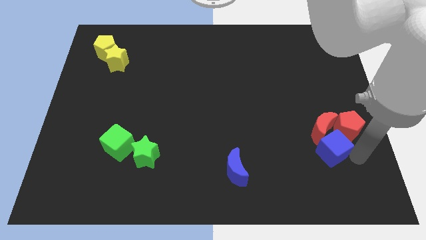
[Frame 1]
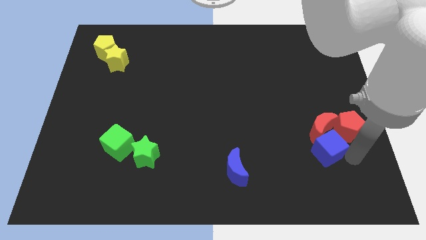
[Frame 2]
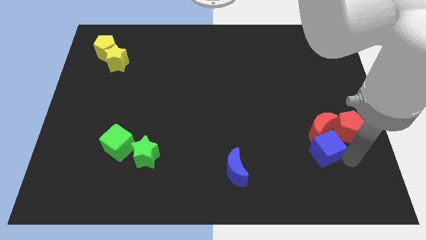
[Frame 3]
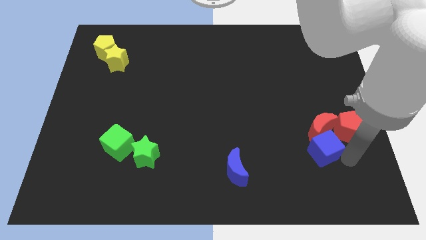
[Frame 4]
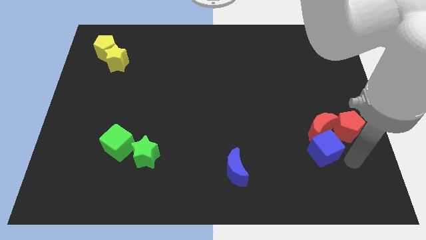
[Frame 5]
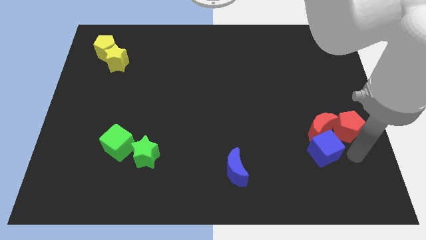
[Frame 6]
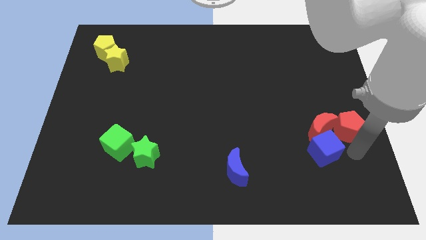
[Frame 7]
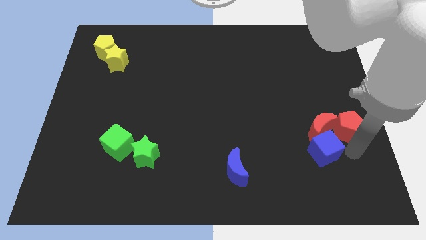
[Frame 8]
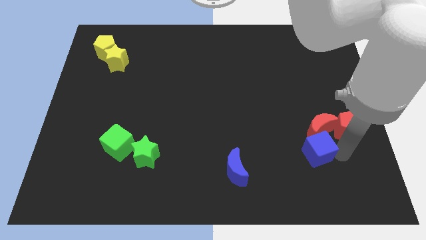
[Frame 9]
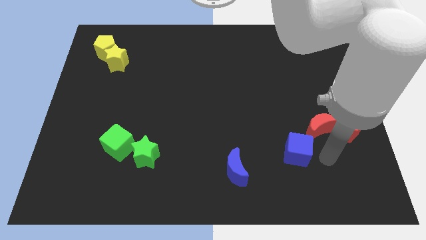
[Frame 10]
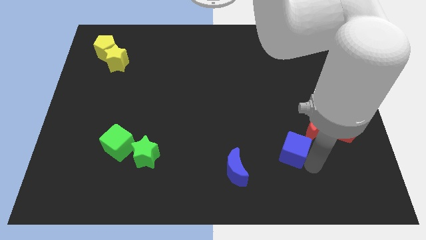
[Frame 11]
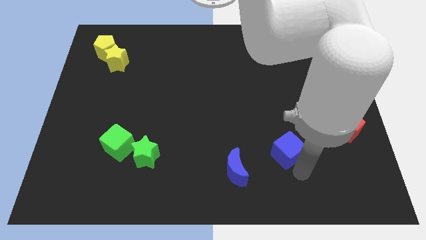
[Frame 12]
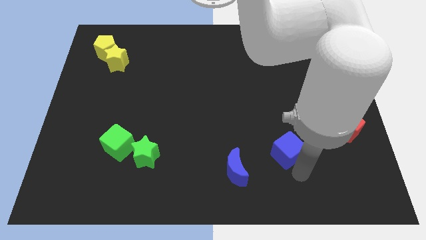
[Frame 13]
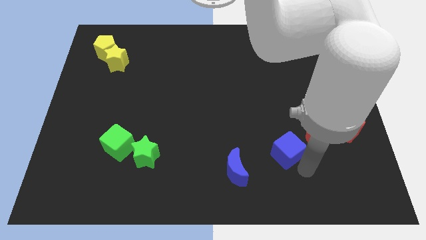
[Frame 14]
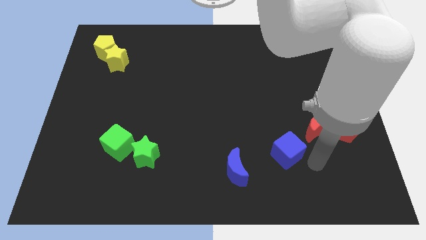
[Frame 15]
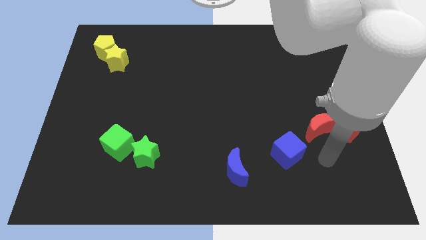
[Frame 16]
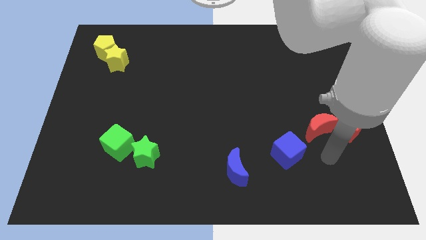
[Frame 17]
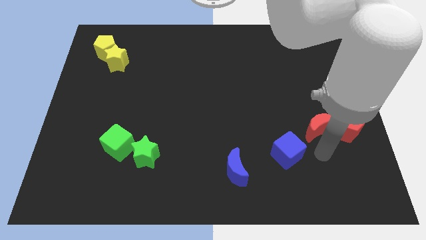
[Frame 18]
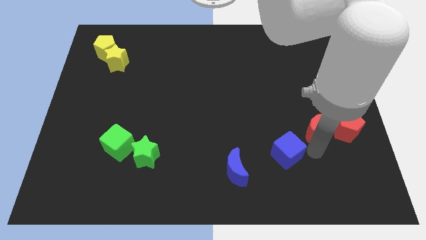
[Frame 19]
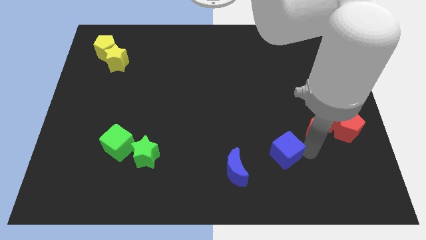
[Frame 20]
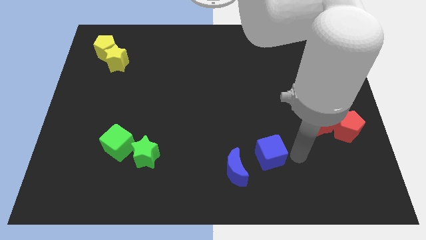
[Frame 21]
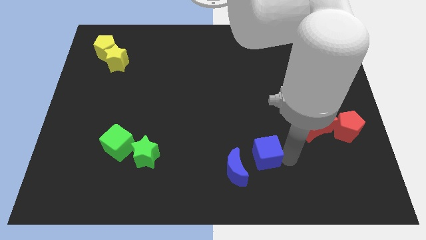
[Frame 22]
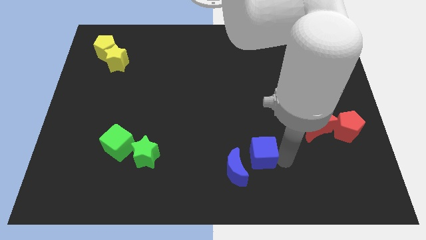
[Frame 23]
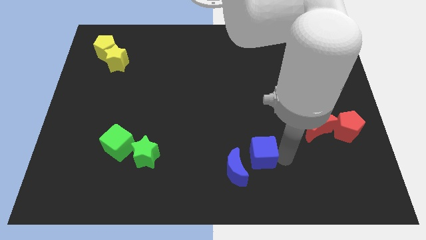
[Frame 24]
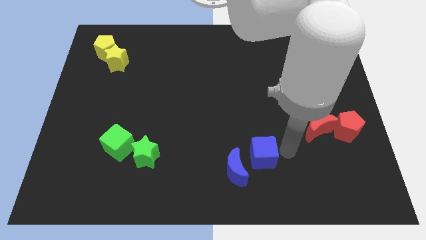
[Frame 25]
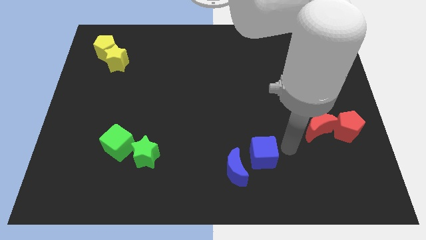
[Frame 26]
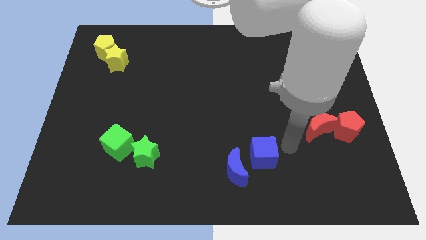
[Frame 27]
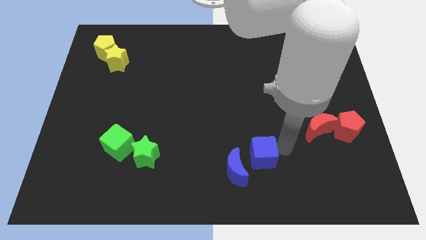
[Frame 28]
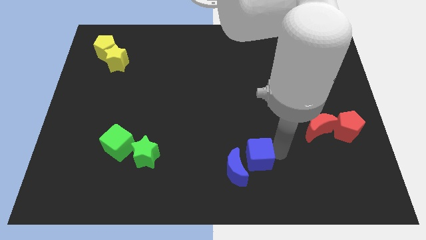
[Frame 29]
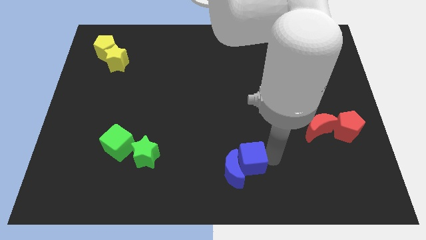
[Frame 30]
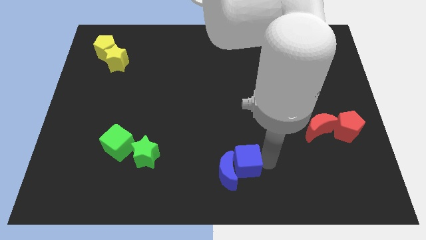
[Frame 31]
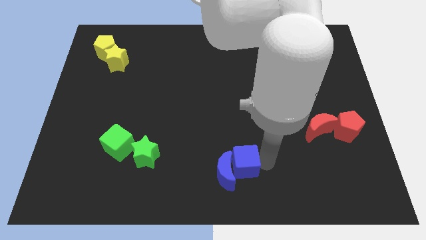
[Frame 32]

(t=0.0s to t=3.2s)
move the blue cube into the right side of the blue crescent

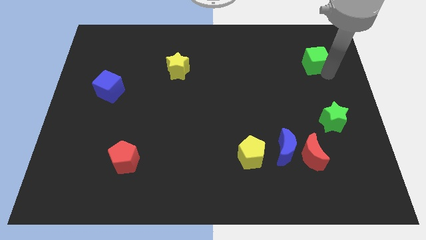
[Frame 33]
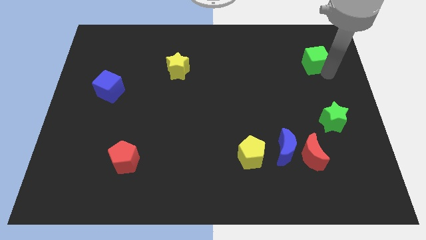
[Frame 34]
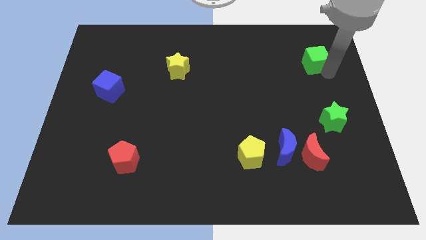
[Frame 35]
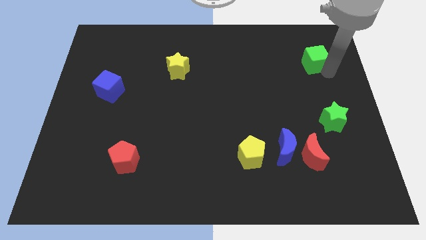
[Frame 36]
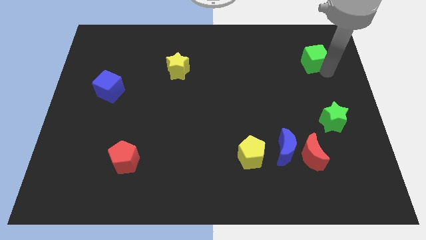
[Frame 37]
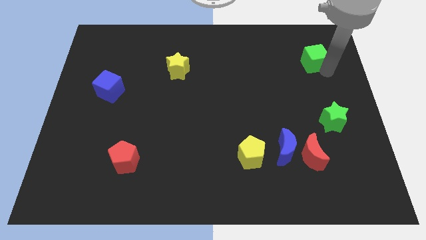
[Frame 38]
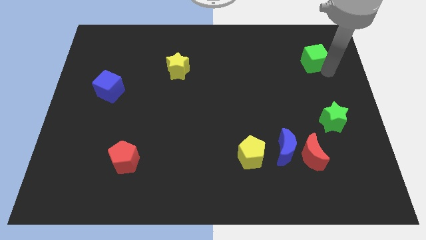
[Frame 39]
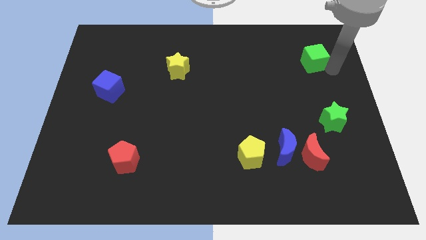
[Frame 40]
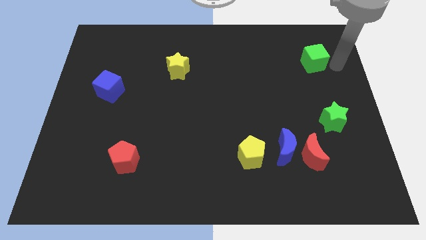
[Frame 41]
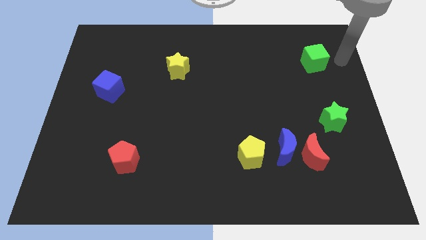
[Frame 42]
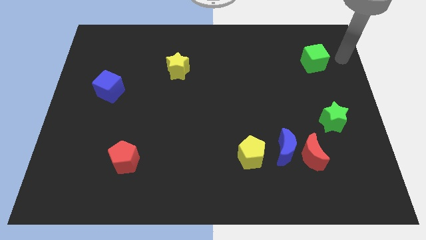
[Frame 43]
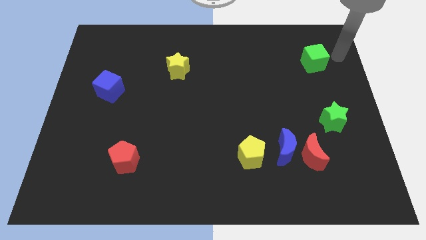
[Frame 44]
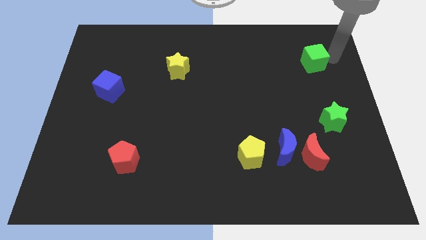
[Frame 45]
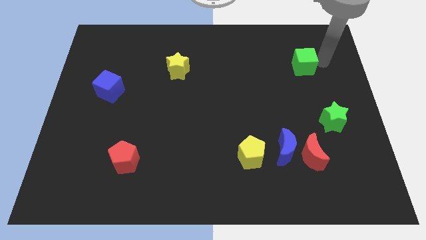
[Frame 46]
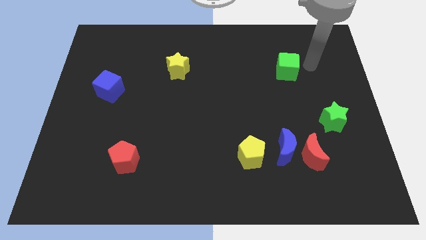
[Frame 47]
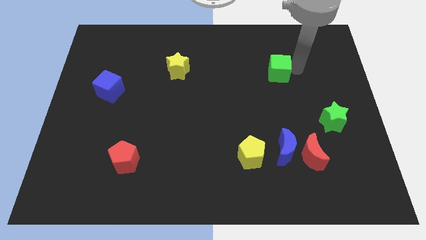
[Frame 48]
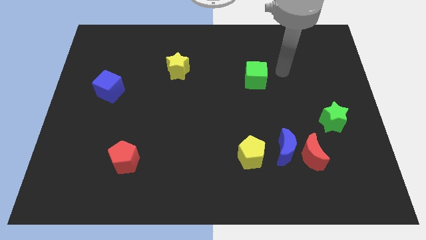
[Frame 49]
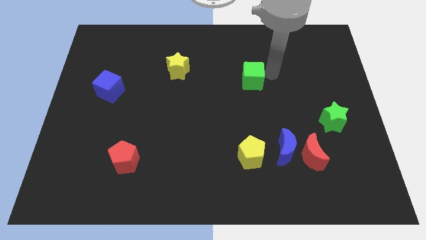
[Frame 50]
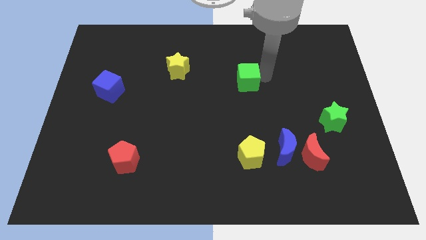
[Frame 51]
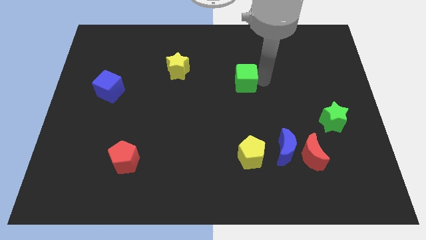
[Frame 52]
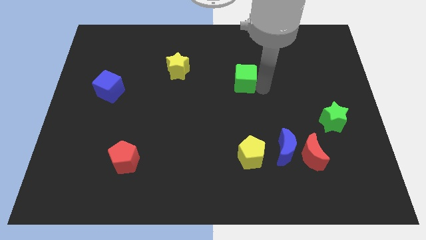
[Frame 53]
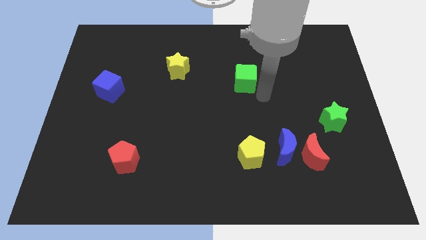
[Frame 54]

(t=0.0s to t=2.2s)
place the green cube above the yellow pentagon

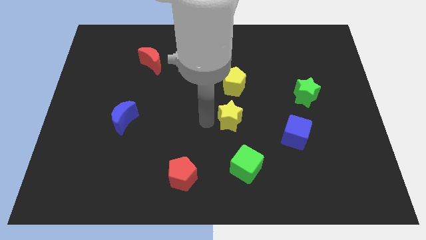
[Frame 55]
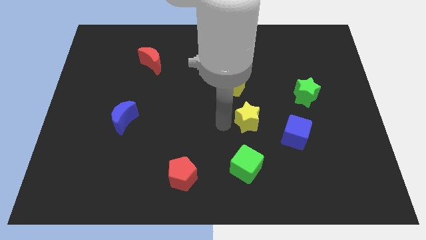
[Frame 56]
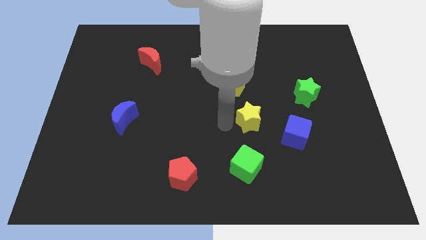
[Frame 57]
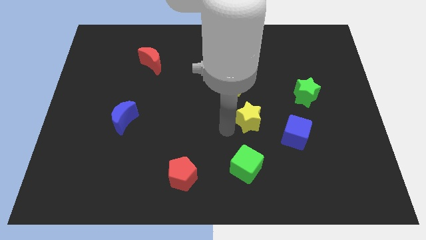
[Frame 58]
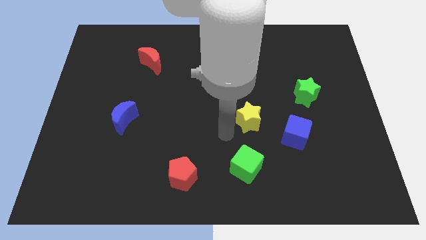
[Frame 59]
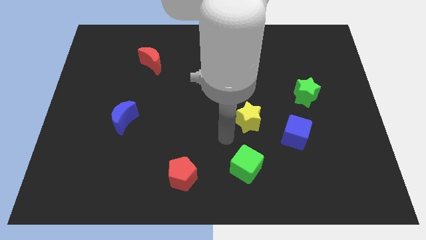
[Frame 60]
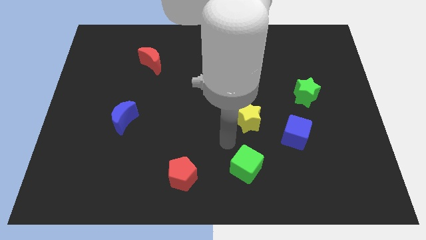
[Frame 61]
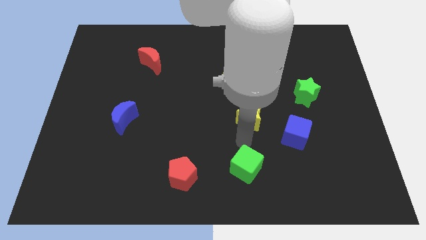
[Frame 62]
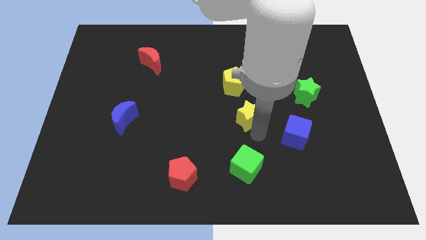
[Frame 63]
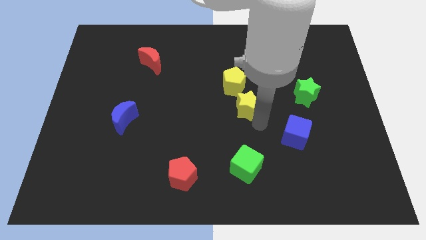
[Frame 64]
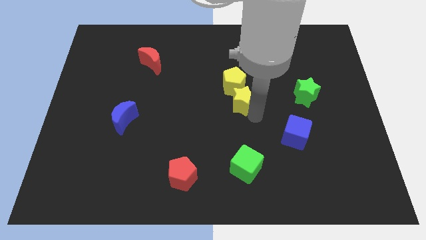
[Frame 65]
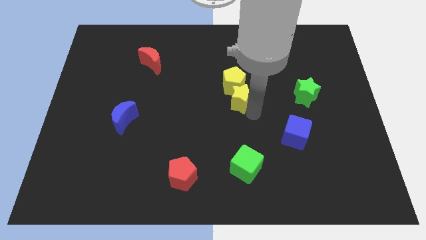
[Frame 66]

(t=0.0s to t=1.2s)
push the yellow star into the yellow pentagon

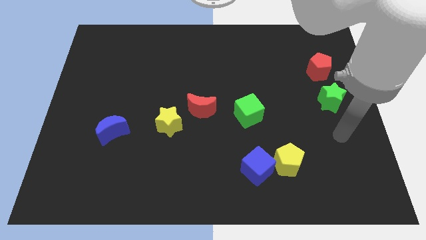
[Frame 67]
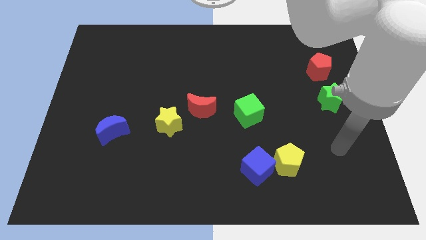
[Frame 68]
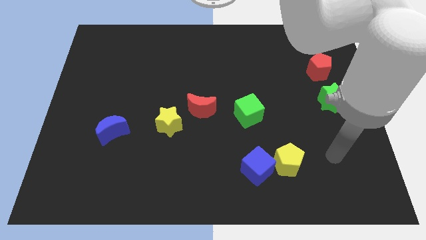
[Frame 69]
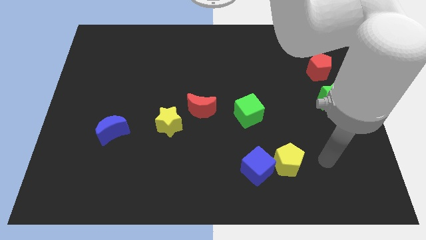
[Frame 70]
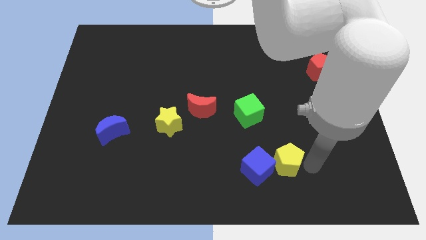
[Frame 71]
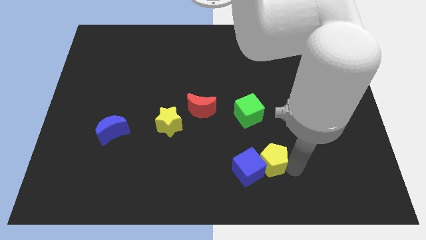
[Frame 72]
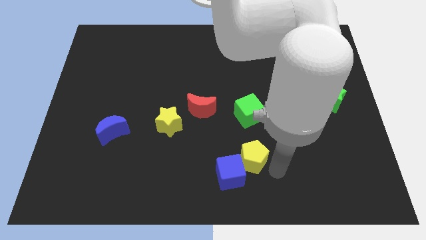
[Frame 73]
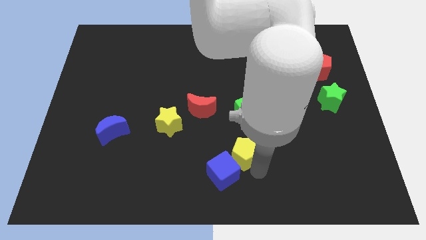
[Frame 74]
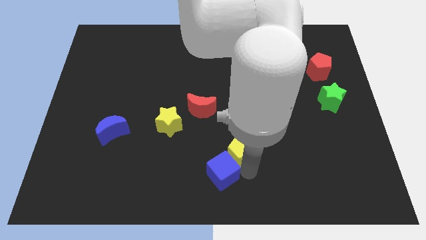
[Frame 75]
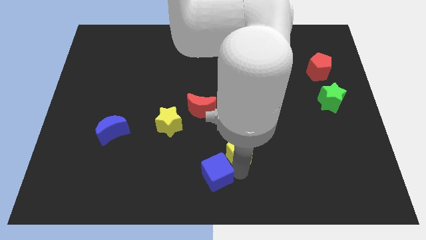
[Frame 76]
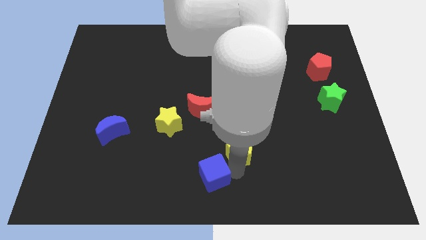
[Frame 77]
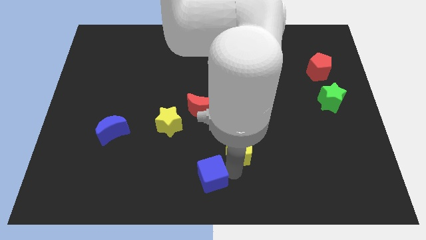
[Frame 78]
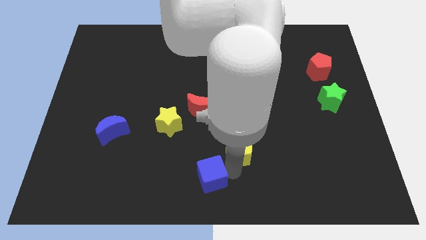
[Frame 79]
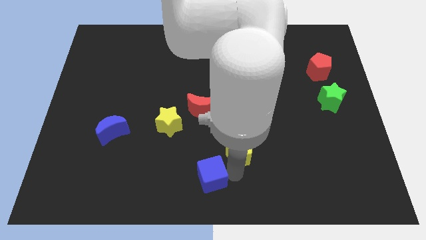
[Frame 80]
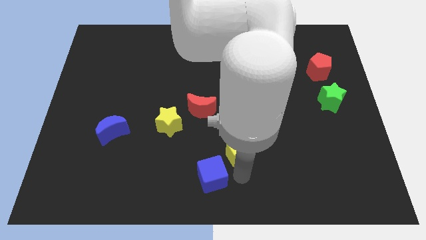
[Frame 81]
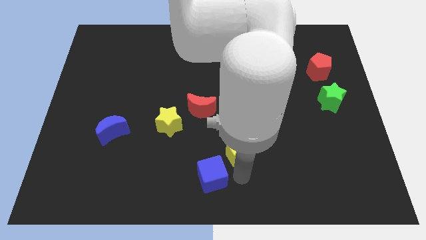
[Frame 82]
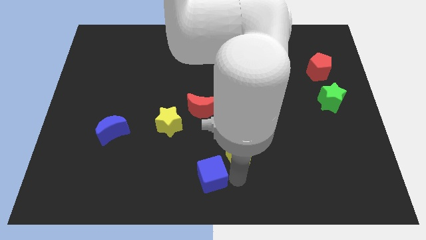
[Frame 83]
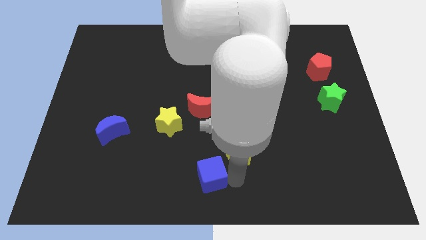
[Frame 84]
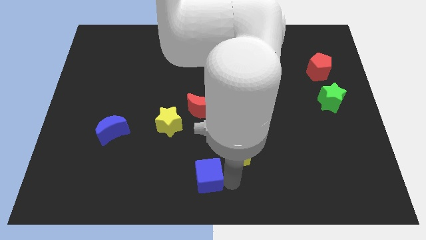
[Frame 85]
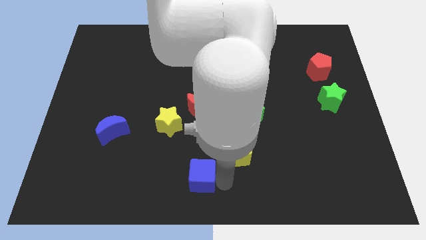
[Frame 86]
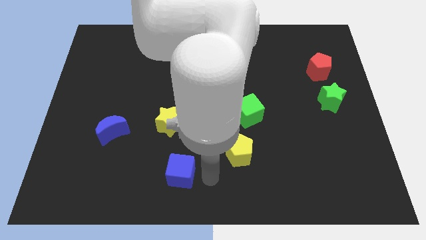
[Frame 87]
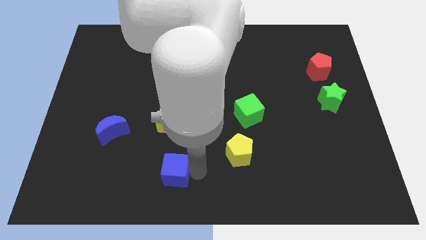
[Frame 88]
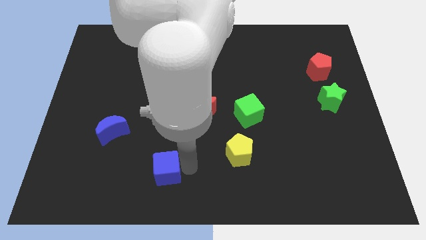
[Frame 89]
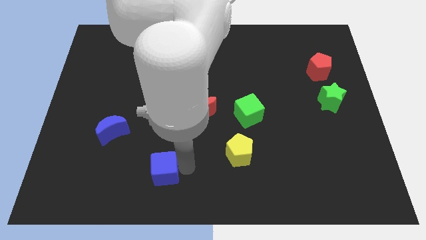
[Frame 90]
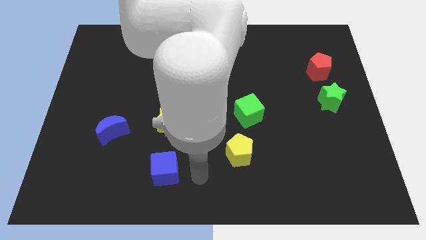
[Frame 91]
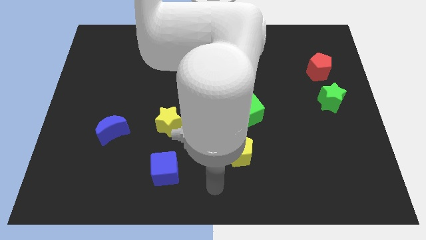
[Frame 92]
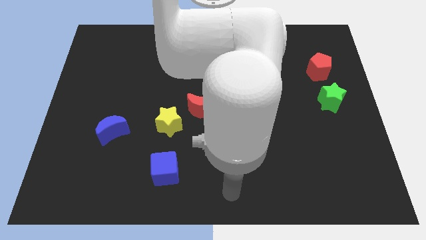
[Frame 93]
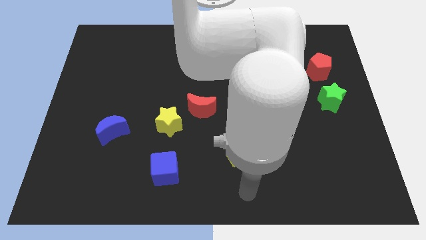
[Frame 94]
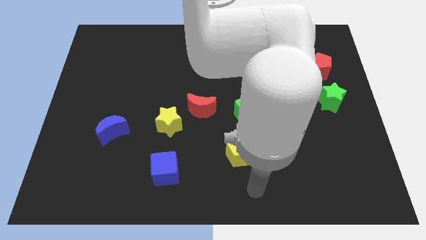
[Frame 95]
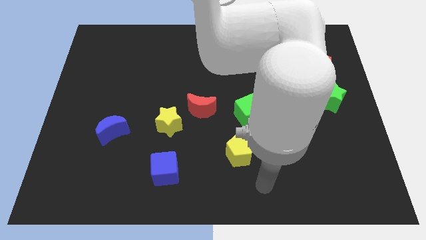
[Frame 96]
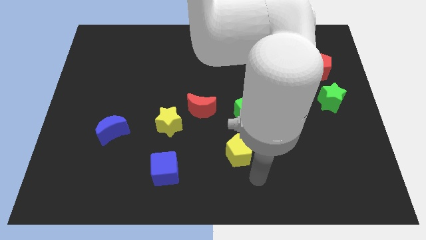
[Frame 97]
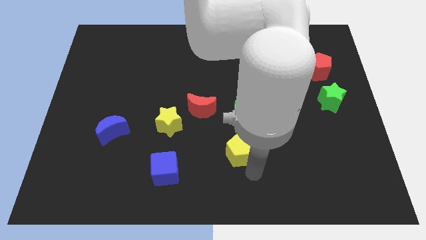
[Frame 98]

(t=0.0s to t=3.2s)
go and separate the blue cube and the yellow pentagon
